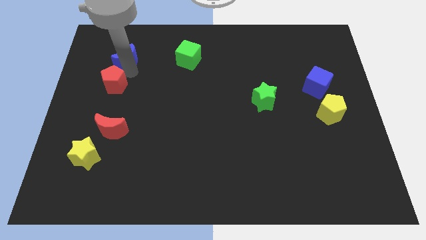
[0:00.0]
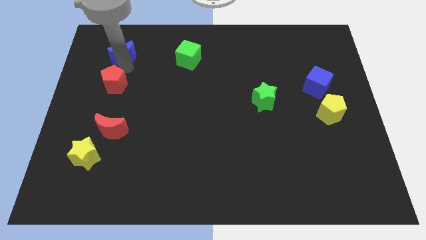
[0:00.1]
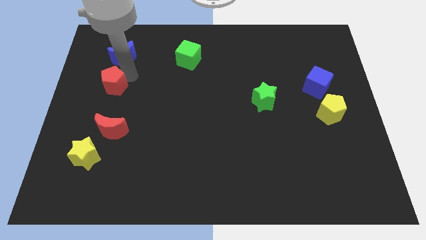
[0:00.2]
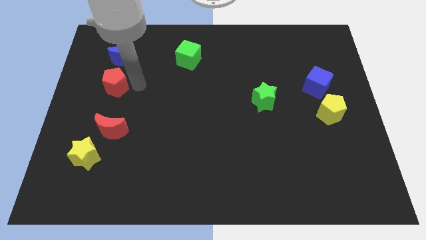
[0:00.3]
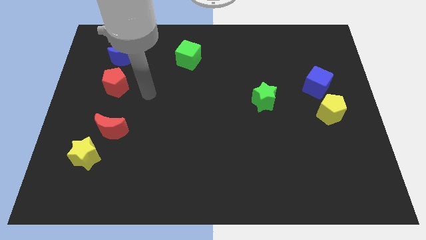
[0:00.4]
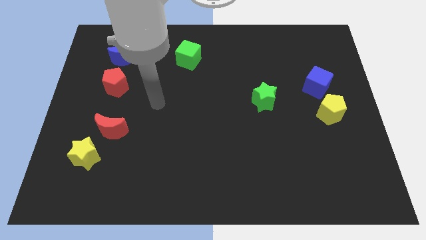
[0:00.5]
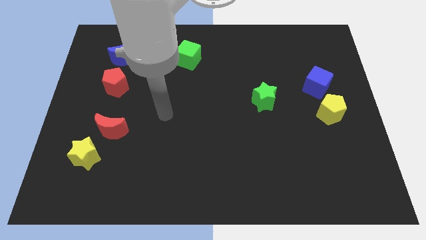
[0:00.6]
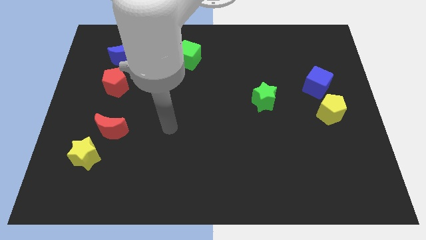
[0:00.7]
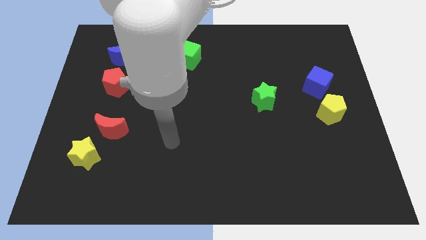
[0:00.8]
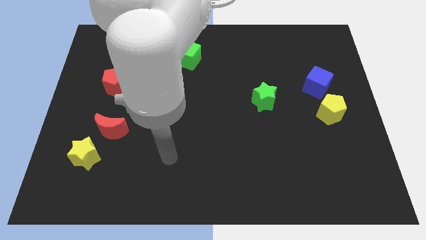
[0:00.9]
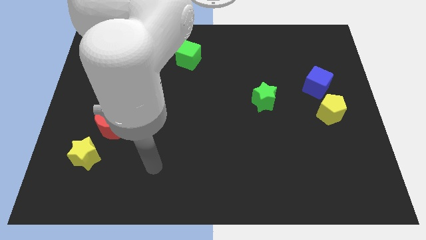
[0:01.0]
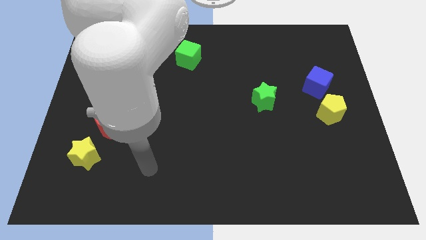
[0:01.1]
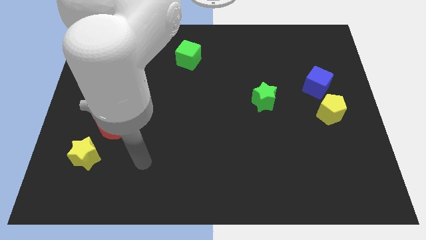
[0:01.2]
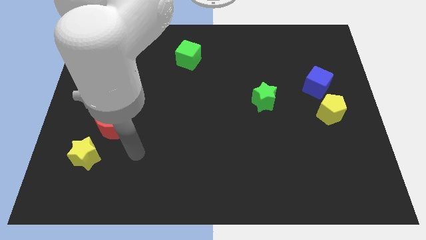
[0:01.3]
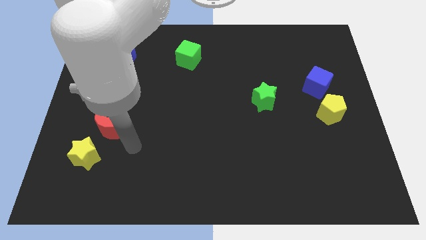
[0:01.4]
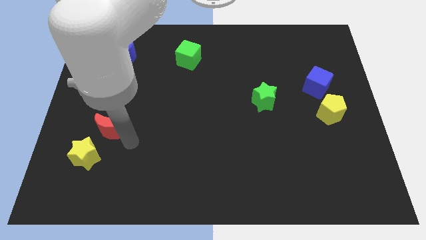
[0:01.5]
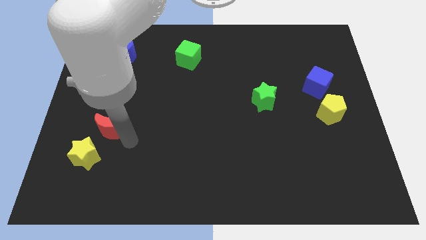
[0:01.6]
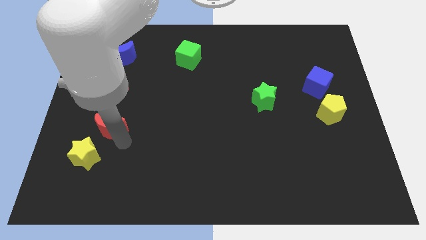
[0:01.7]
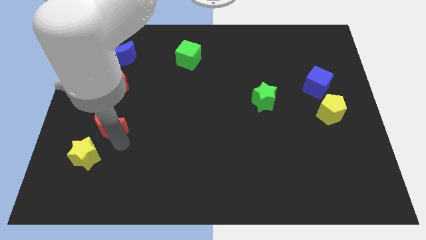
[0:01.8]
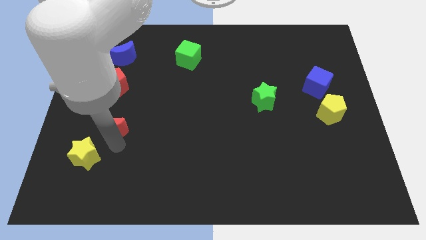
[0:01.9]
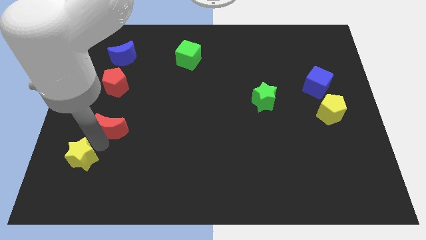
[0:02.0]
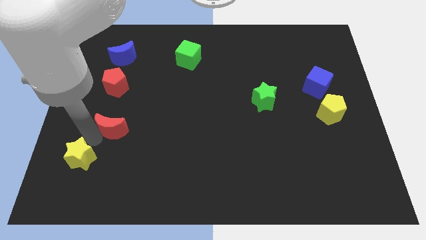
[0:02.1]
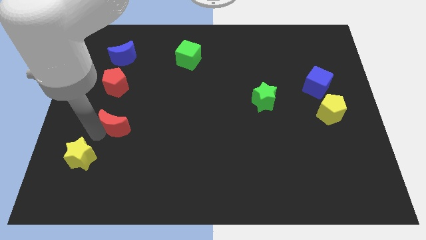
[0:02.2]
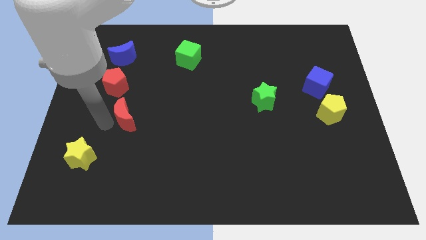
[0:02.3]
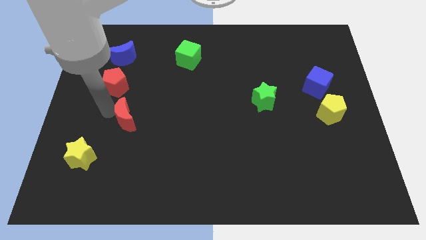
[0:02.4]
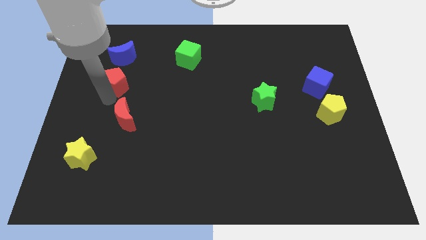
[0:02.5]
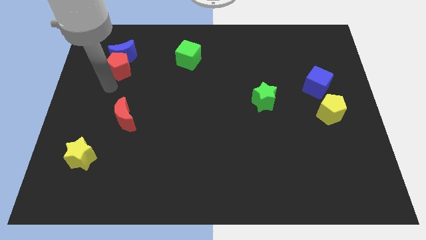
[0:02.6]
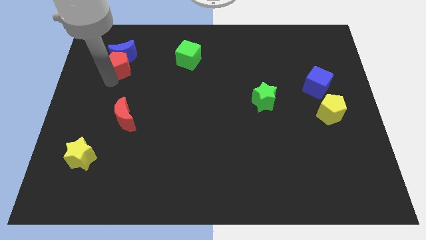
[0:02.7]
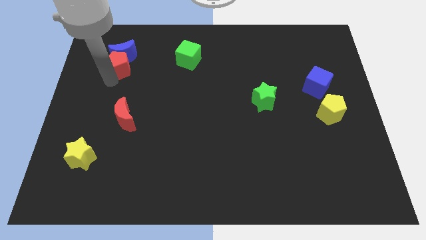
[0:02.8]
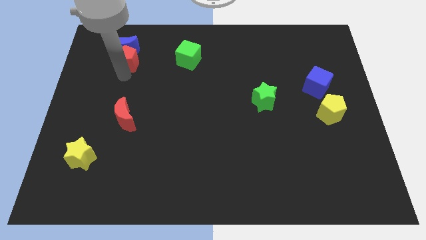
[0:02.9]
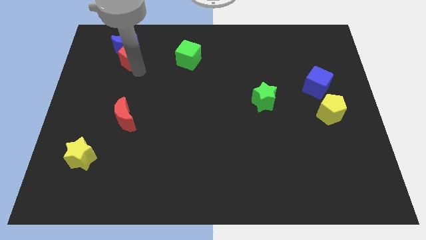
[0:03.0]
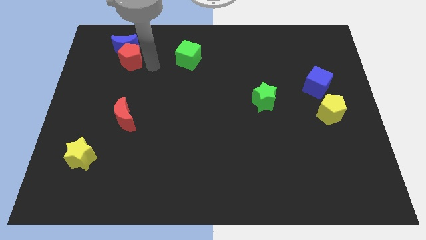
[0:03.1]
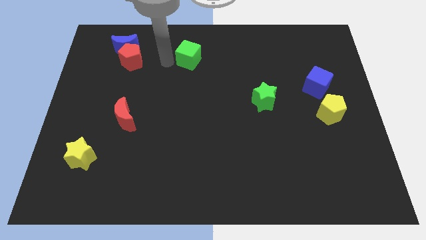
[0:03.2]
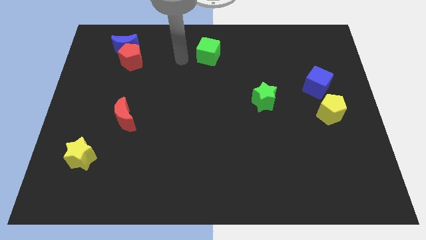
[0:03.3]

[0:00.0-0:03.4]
push the red pentagon into the blue moon

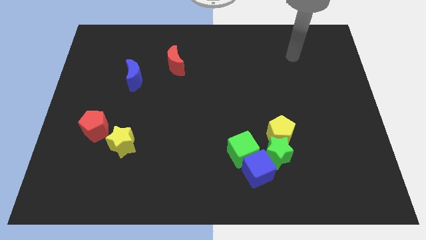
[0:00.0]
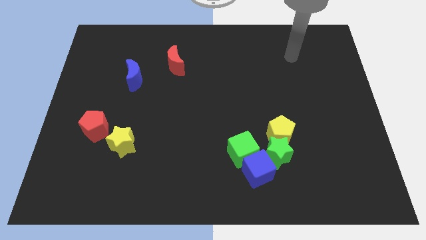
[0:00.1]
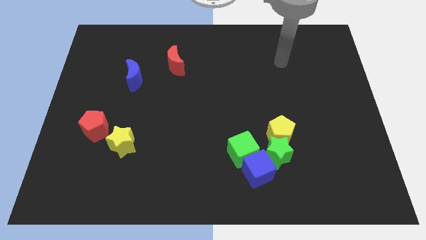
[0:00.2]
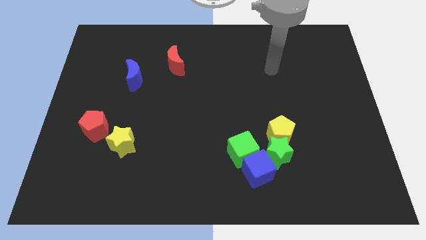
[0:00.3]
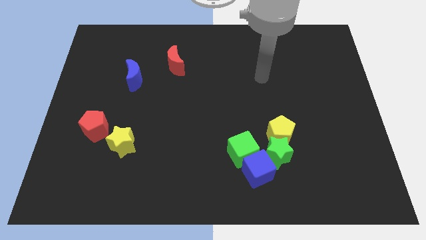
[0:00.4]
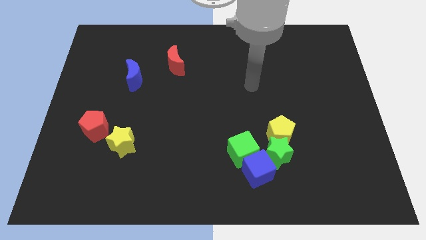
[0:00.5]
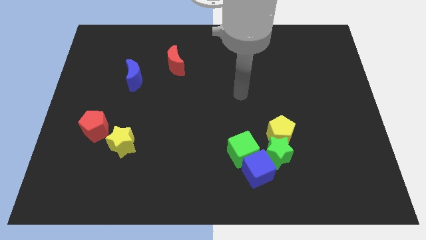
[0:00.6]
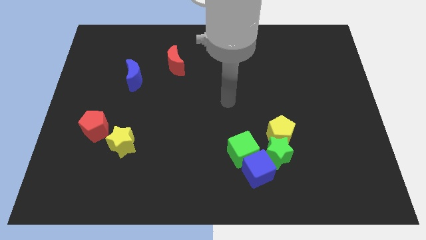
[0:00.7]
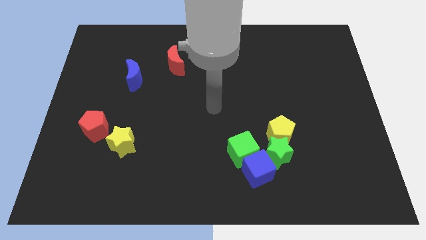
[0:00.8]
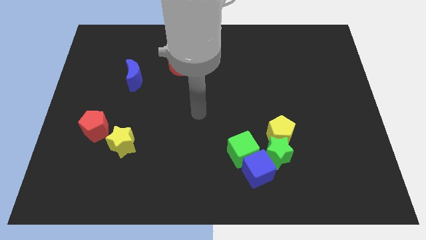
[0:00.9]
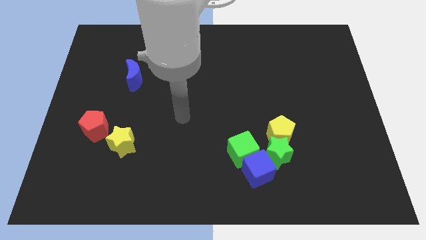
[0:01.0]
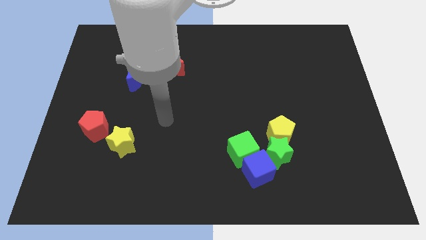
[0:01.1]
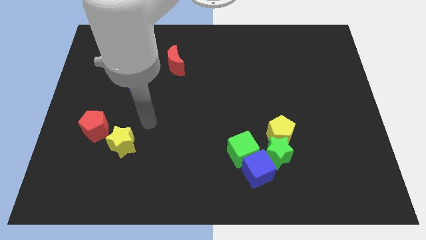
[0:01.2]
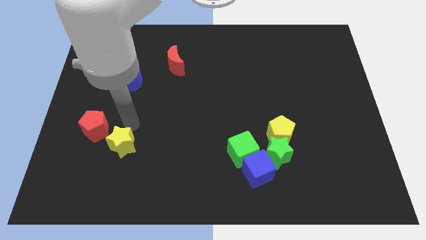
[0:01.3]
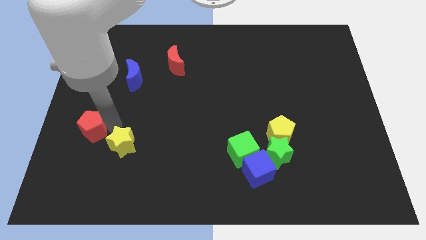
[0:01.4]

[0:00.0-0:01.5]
tap the red pentagon

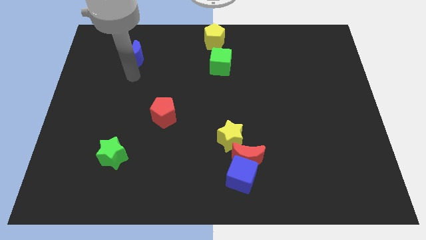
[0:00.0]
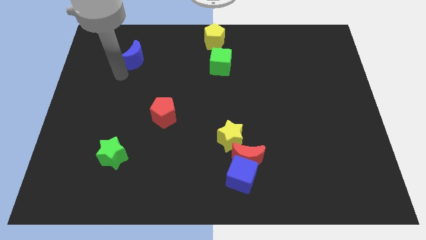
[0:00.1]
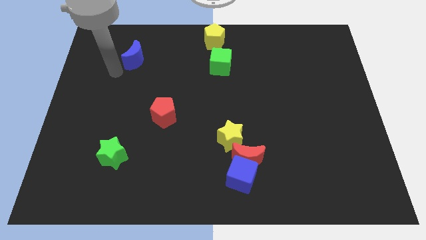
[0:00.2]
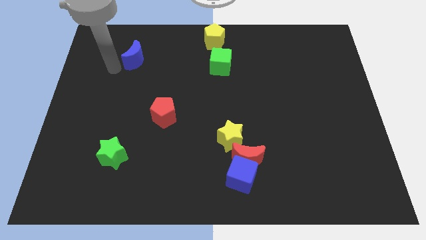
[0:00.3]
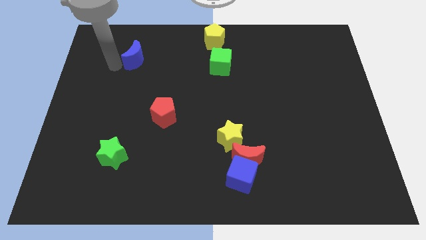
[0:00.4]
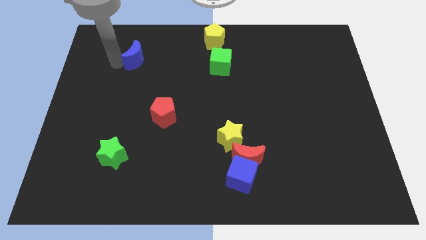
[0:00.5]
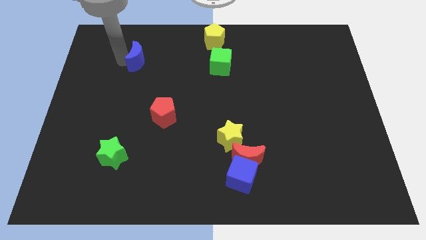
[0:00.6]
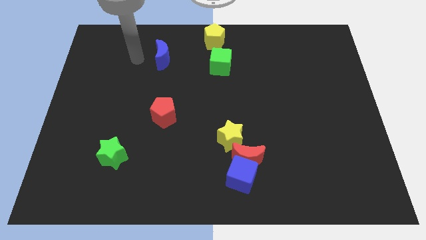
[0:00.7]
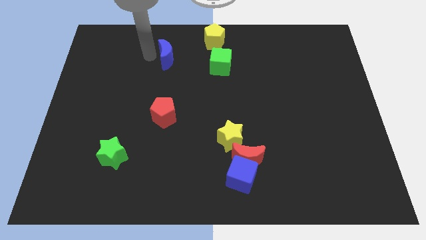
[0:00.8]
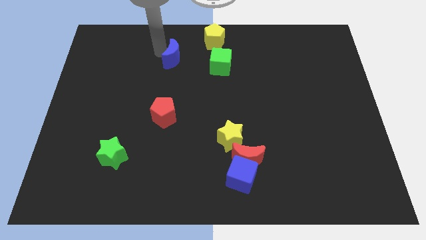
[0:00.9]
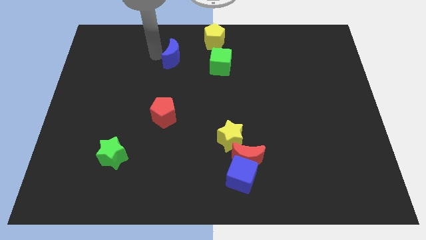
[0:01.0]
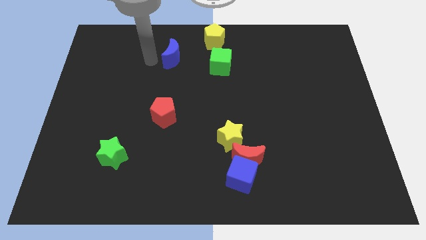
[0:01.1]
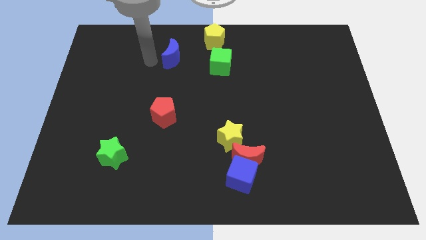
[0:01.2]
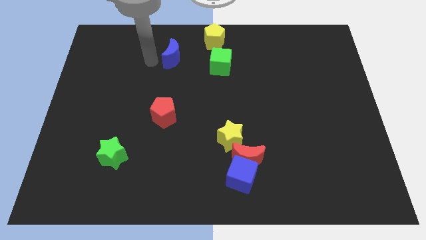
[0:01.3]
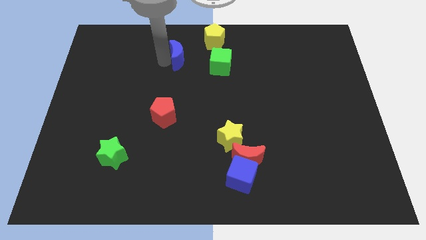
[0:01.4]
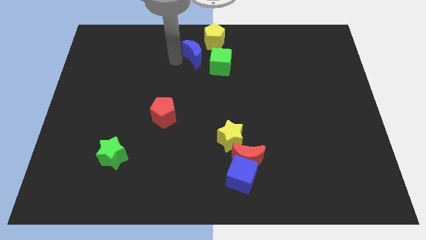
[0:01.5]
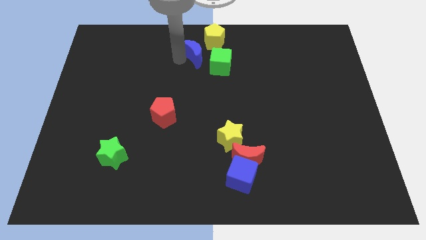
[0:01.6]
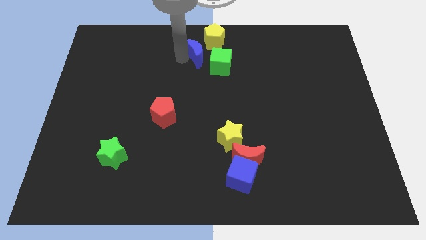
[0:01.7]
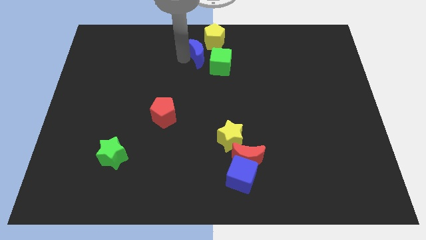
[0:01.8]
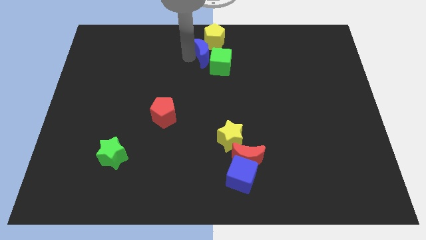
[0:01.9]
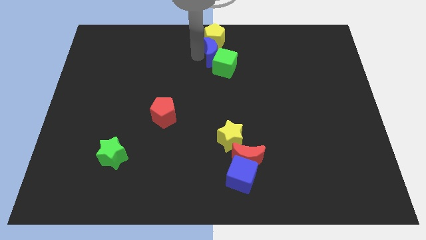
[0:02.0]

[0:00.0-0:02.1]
push the blue moon into the green cube

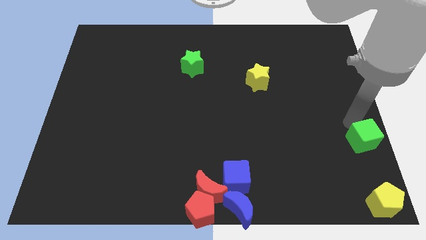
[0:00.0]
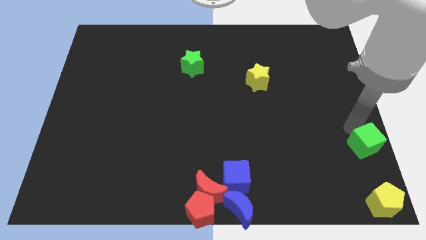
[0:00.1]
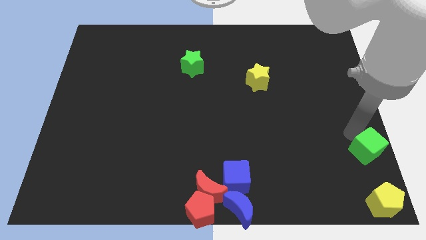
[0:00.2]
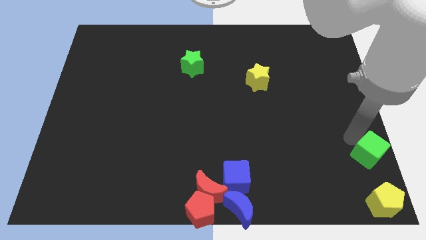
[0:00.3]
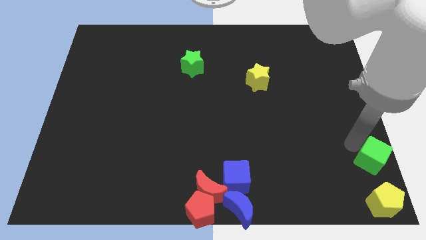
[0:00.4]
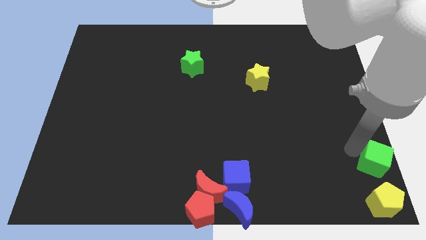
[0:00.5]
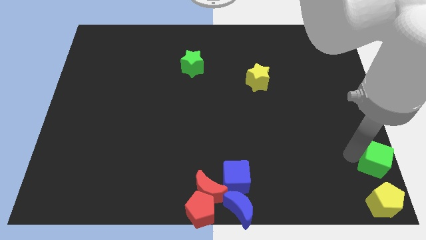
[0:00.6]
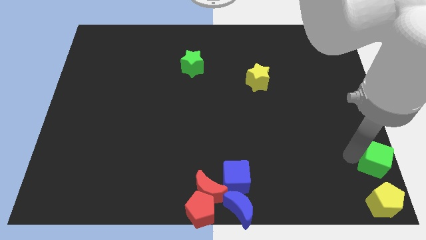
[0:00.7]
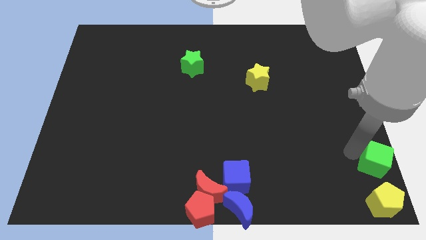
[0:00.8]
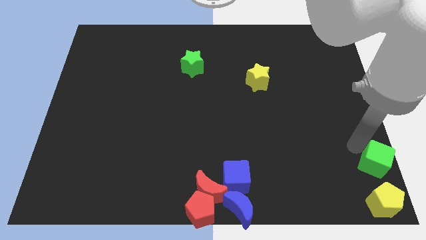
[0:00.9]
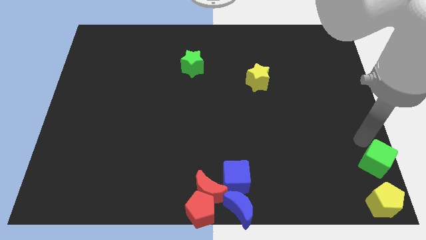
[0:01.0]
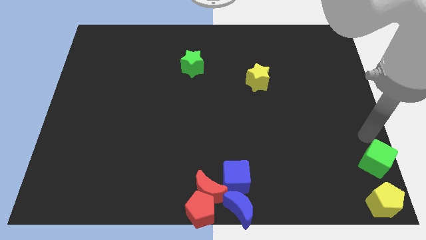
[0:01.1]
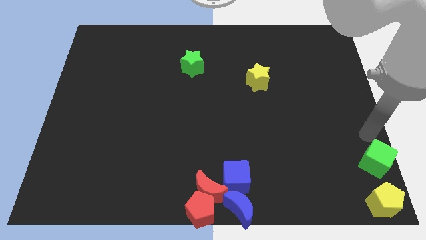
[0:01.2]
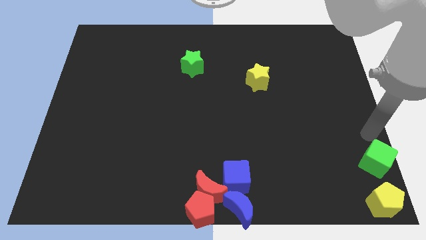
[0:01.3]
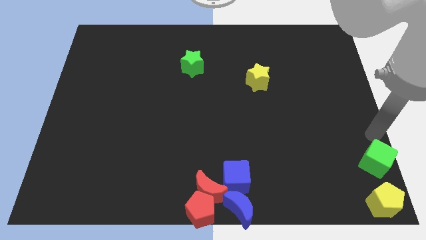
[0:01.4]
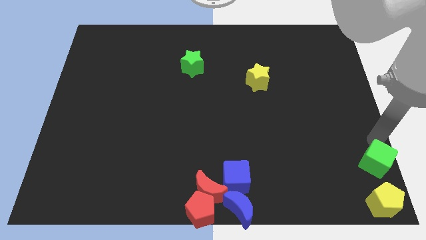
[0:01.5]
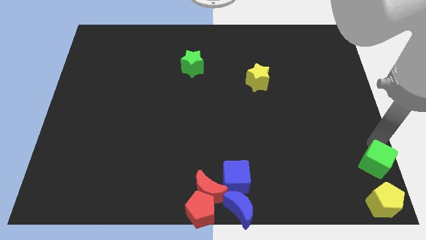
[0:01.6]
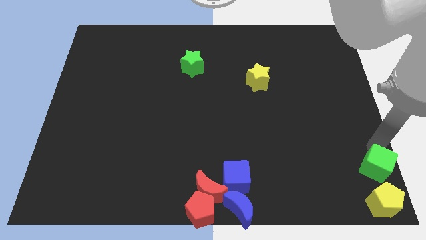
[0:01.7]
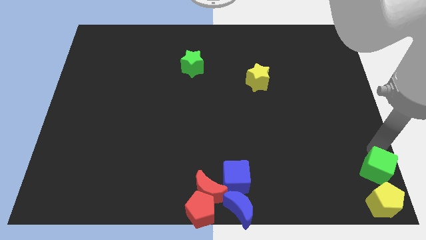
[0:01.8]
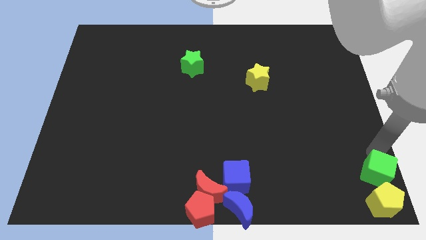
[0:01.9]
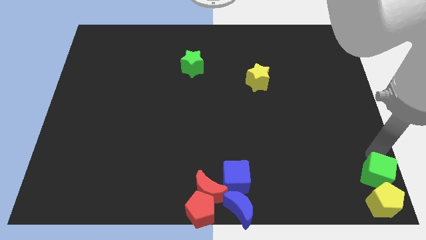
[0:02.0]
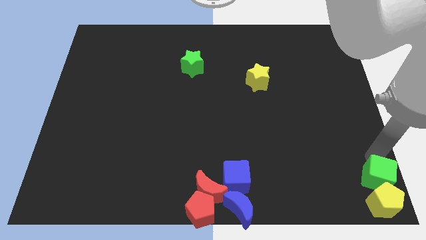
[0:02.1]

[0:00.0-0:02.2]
place green cube closer to yellow pentagon
